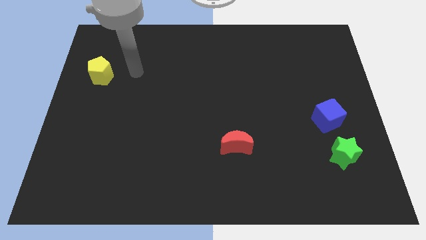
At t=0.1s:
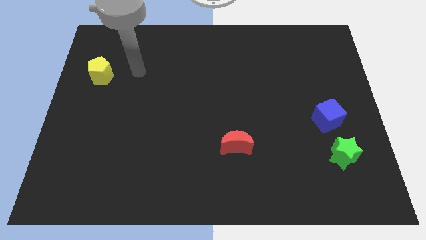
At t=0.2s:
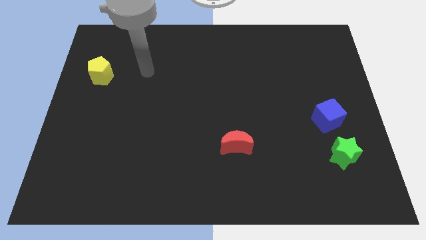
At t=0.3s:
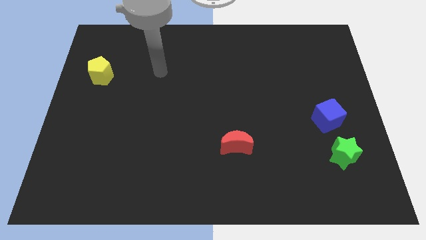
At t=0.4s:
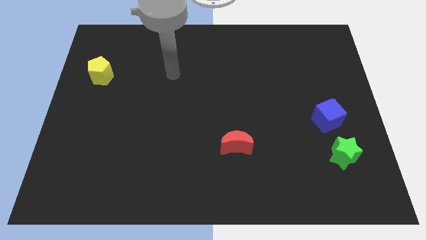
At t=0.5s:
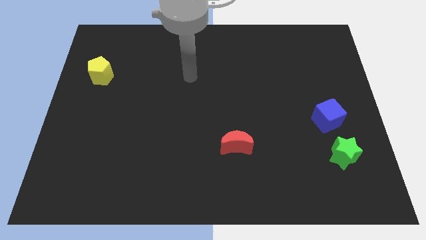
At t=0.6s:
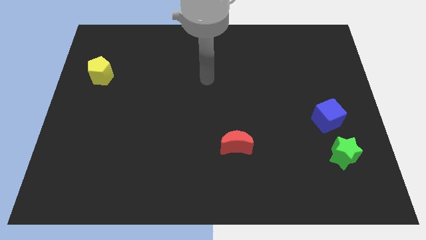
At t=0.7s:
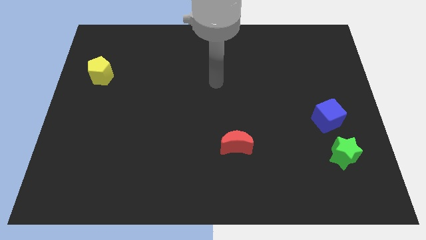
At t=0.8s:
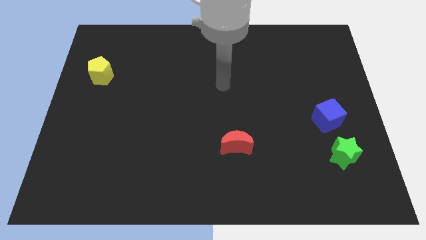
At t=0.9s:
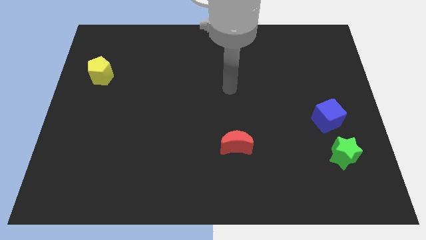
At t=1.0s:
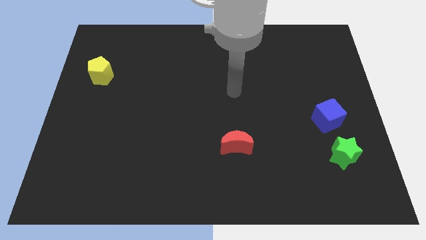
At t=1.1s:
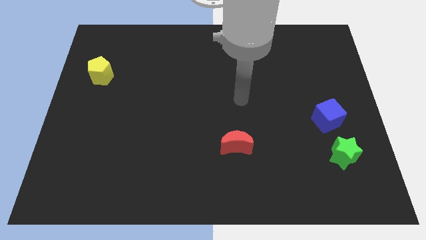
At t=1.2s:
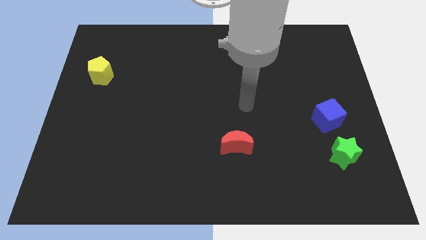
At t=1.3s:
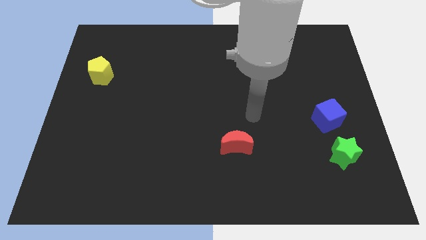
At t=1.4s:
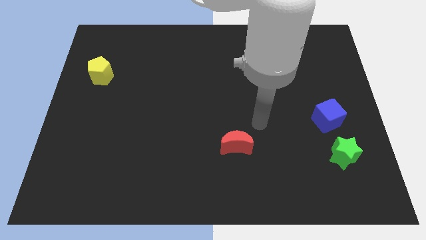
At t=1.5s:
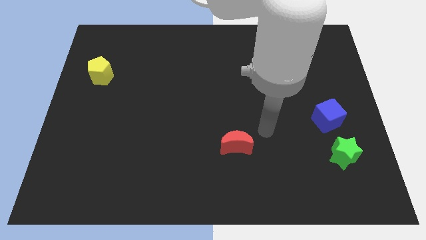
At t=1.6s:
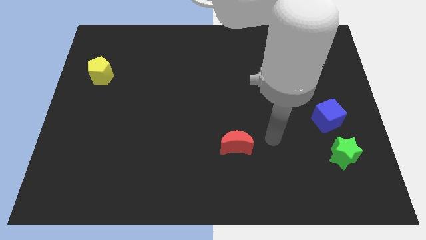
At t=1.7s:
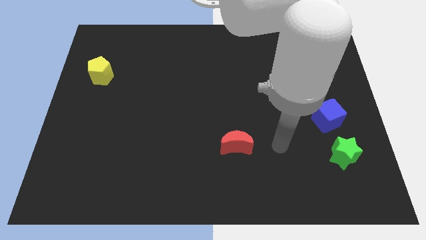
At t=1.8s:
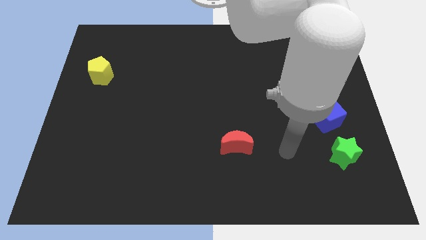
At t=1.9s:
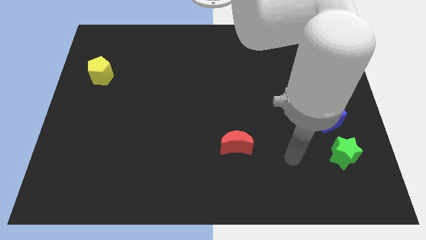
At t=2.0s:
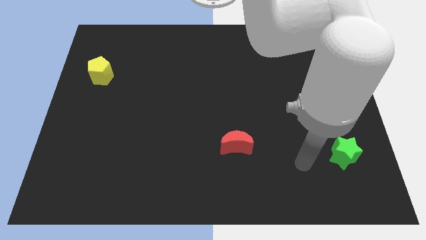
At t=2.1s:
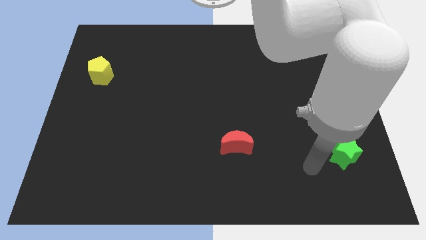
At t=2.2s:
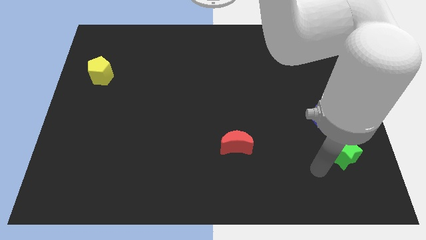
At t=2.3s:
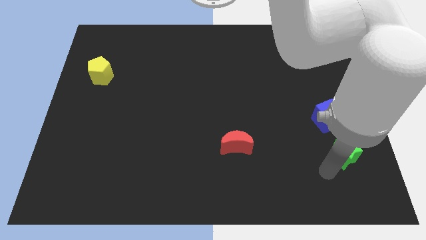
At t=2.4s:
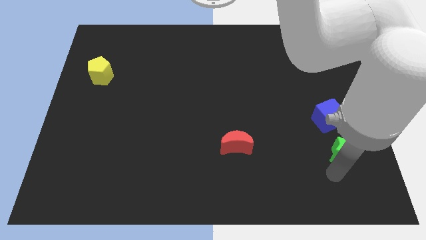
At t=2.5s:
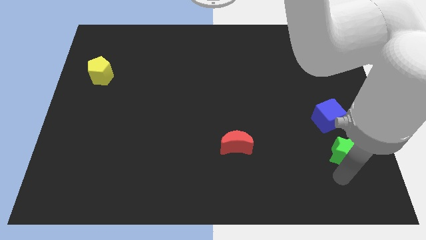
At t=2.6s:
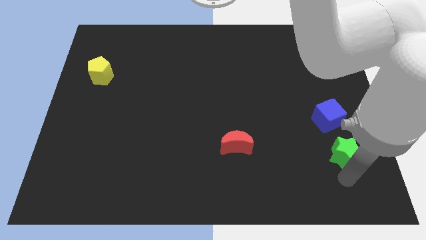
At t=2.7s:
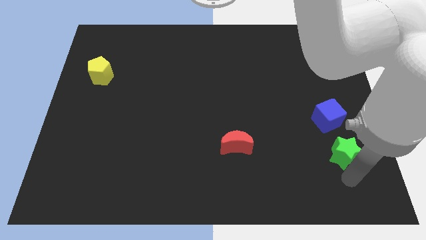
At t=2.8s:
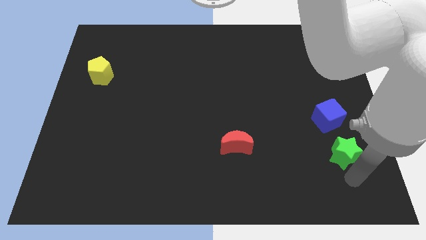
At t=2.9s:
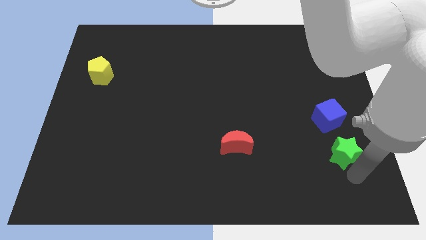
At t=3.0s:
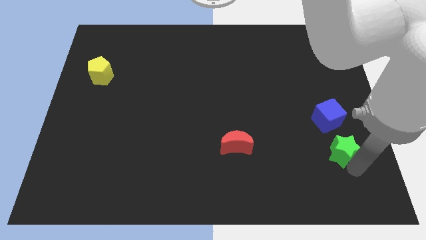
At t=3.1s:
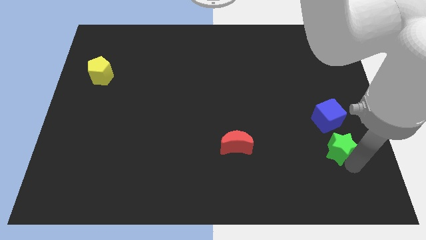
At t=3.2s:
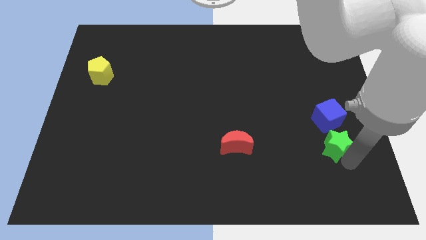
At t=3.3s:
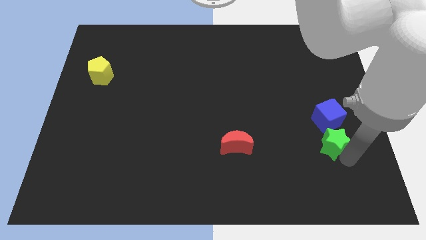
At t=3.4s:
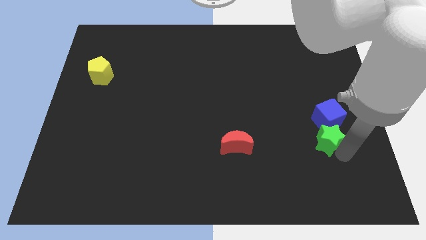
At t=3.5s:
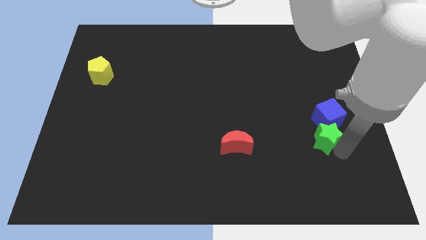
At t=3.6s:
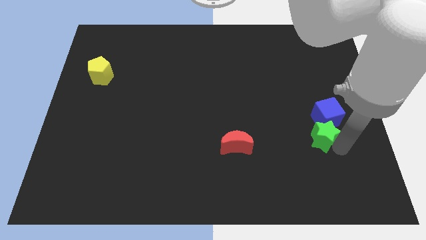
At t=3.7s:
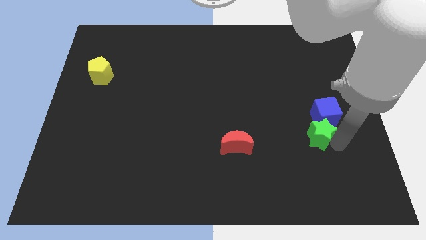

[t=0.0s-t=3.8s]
move the green block to the blue block

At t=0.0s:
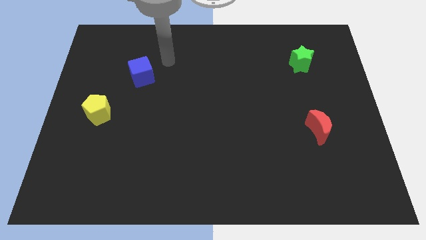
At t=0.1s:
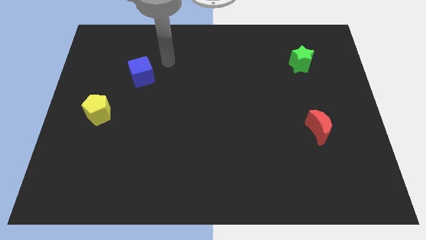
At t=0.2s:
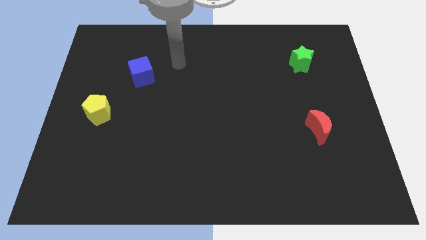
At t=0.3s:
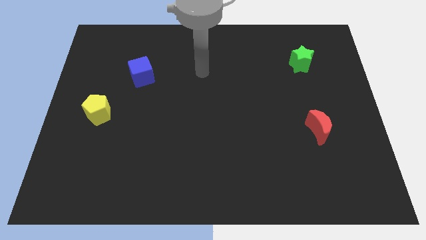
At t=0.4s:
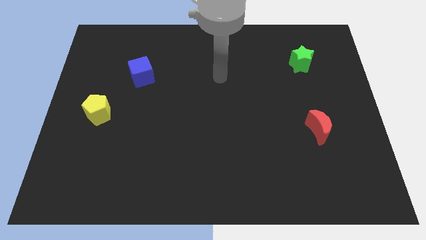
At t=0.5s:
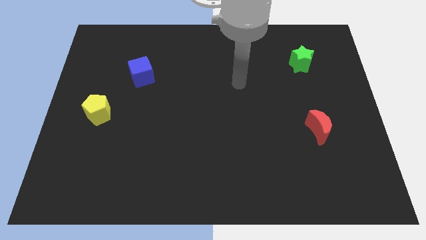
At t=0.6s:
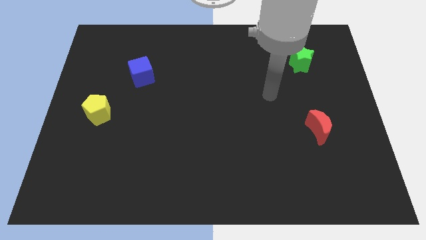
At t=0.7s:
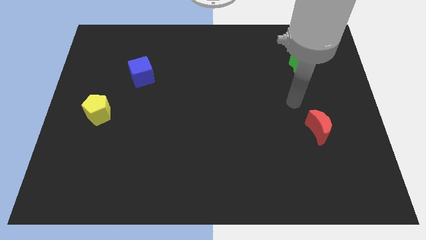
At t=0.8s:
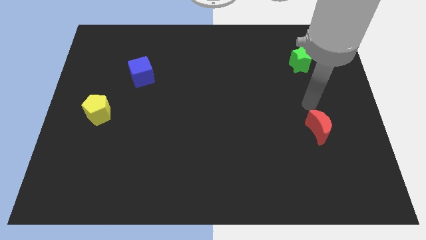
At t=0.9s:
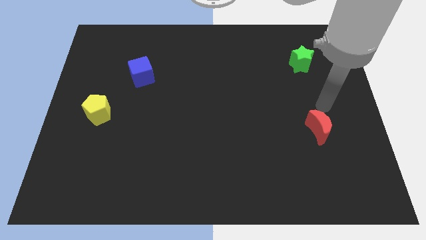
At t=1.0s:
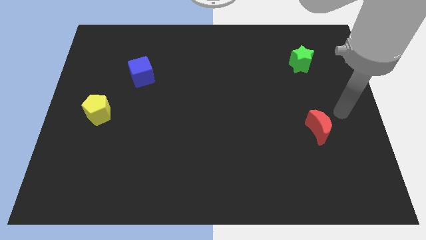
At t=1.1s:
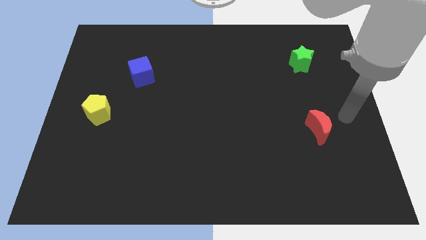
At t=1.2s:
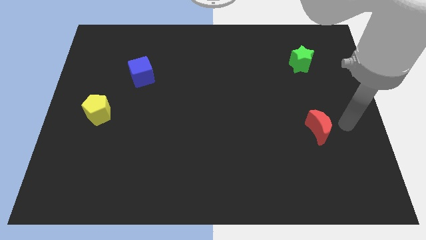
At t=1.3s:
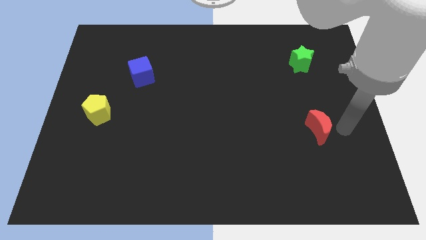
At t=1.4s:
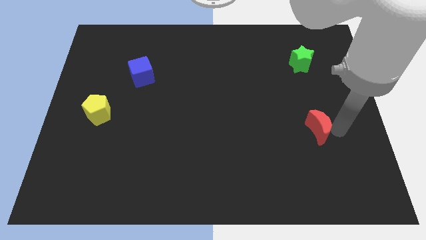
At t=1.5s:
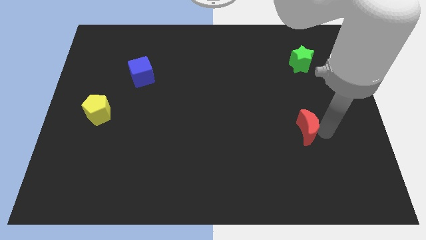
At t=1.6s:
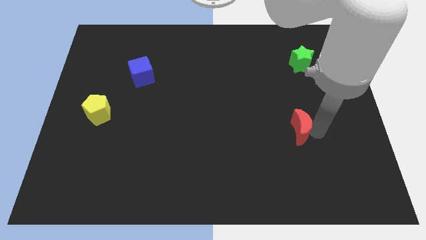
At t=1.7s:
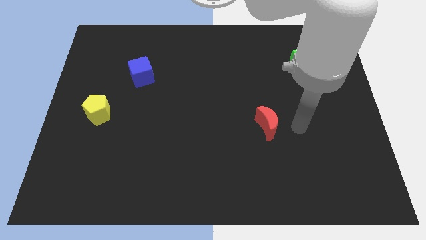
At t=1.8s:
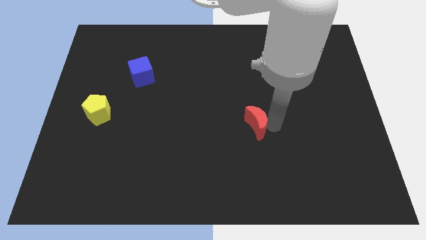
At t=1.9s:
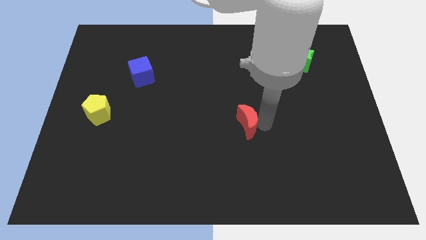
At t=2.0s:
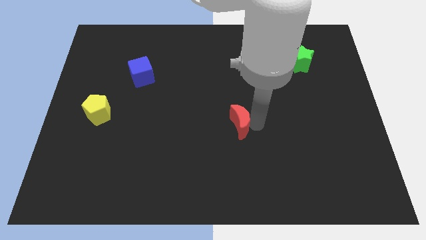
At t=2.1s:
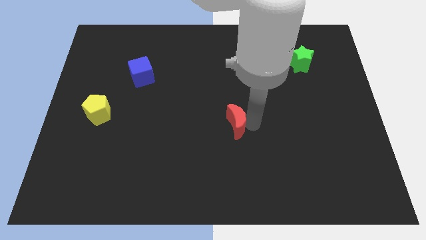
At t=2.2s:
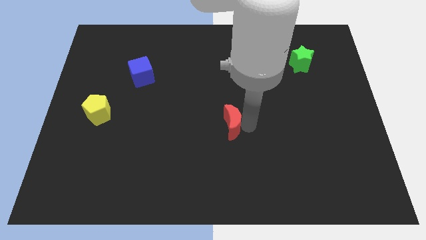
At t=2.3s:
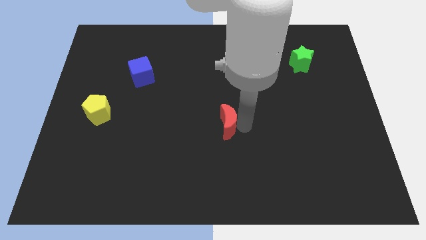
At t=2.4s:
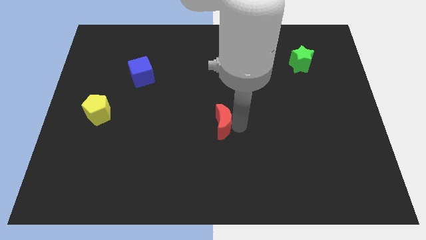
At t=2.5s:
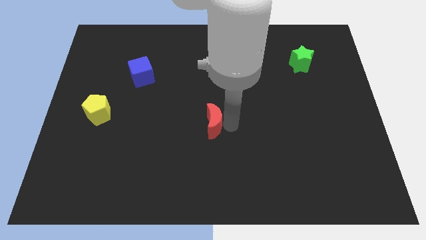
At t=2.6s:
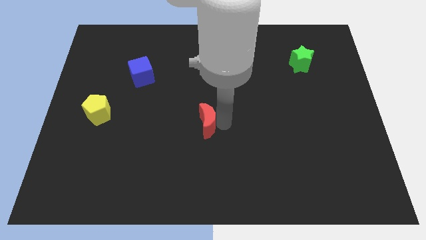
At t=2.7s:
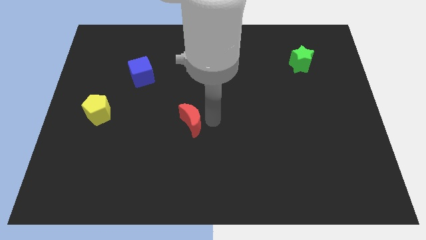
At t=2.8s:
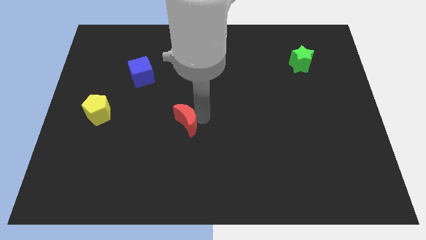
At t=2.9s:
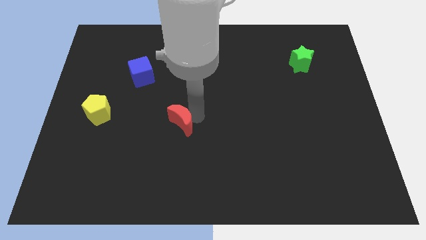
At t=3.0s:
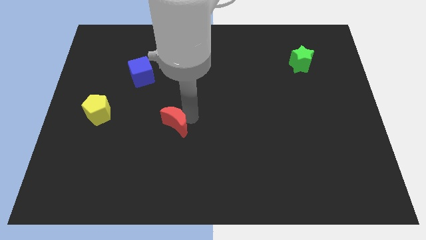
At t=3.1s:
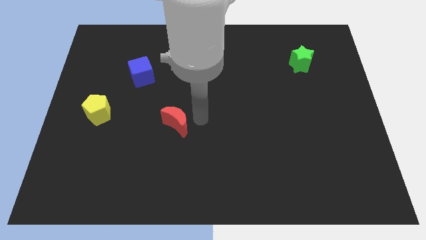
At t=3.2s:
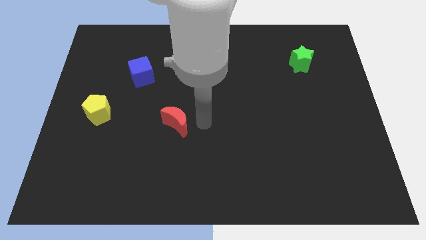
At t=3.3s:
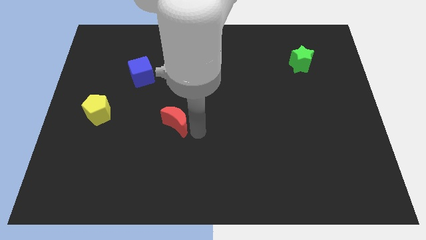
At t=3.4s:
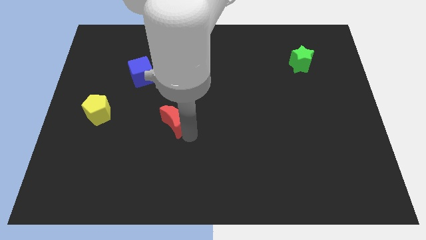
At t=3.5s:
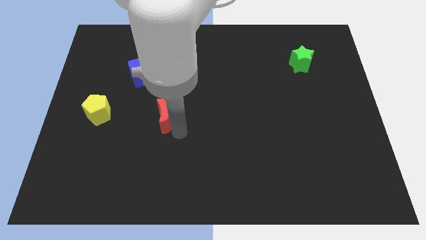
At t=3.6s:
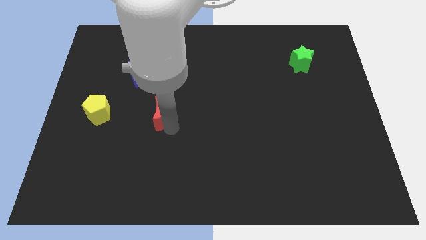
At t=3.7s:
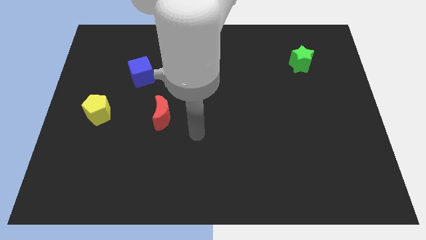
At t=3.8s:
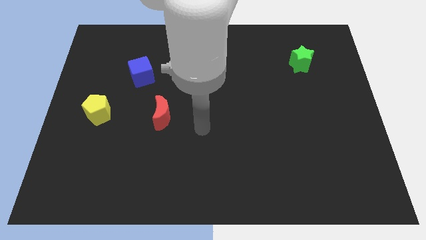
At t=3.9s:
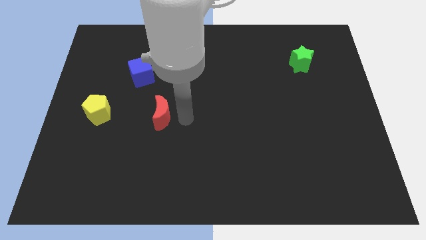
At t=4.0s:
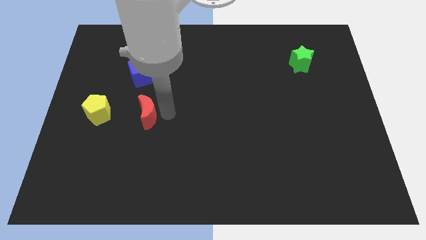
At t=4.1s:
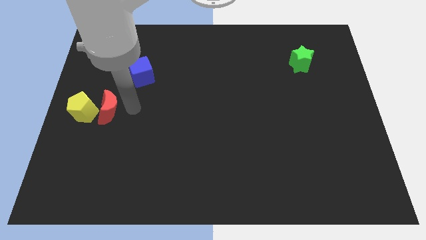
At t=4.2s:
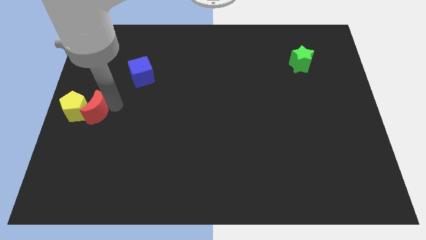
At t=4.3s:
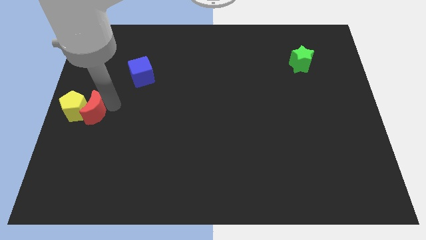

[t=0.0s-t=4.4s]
move the red block close to the yellow pentagon

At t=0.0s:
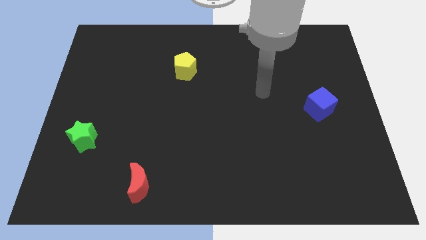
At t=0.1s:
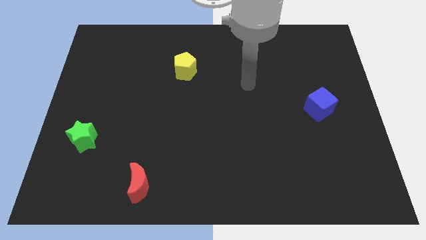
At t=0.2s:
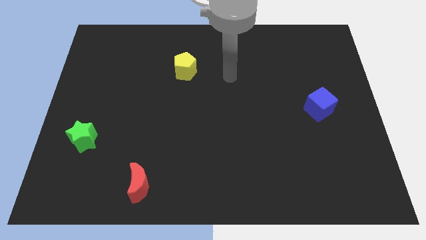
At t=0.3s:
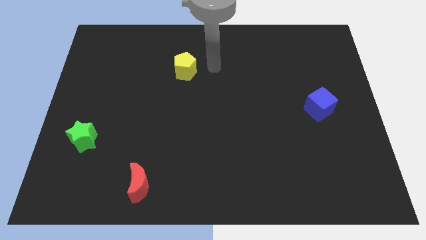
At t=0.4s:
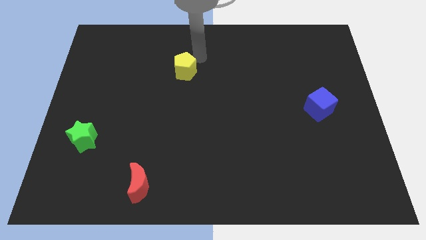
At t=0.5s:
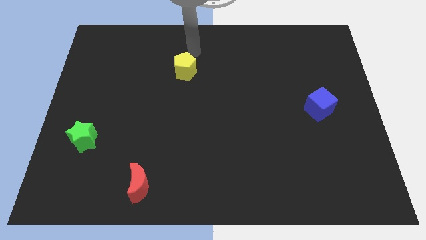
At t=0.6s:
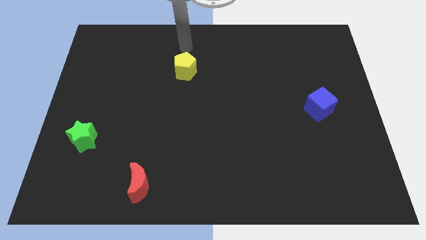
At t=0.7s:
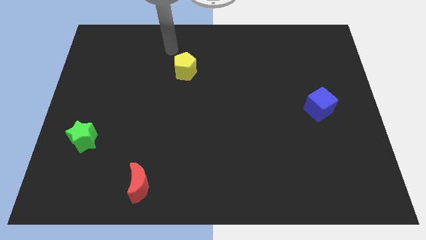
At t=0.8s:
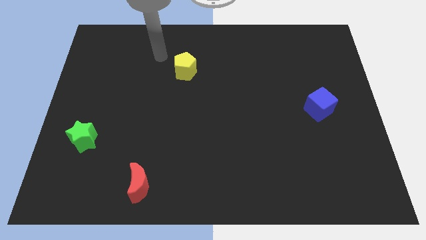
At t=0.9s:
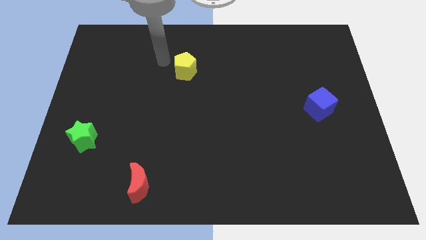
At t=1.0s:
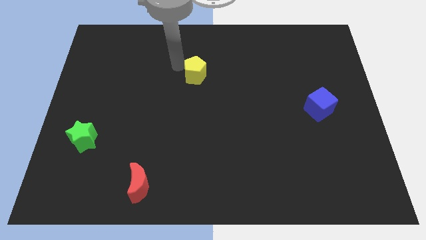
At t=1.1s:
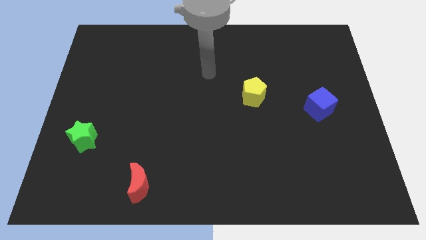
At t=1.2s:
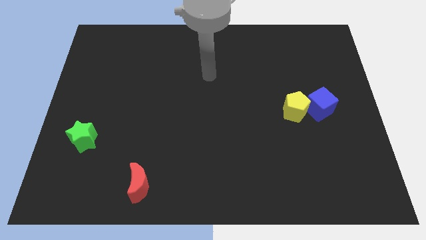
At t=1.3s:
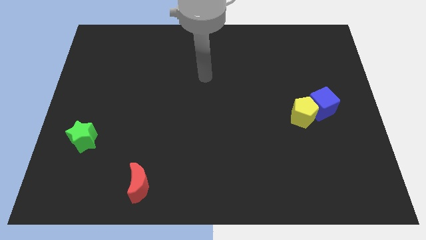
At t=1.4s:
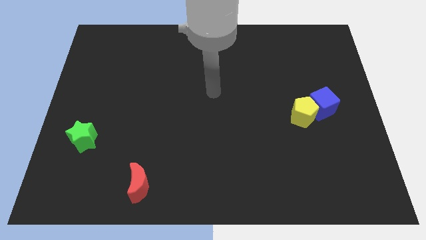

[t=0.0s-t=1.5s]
put the yellow block close to the cube
